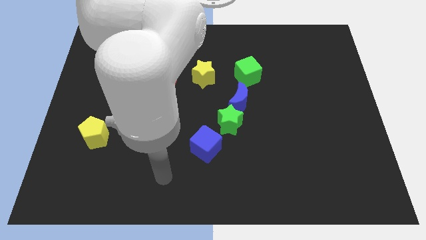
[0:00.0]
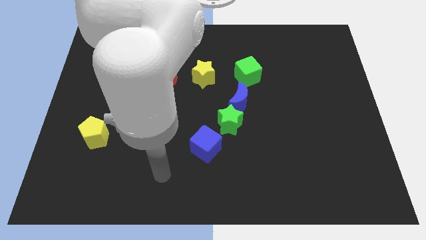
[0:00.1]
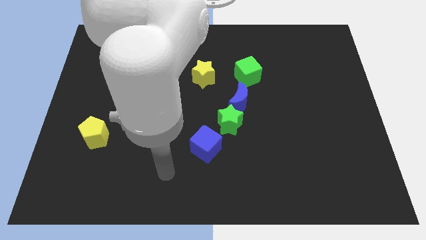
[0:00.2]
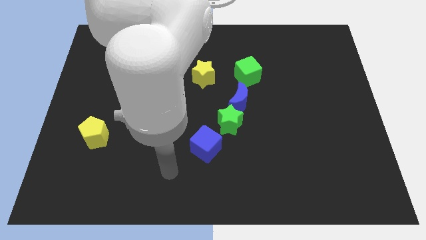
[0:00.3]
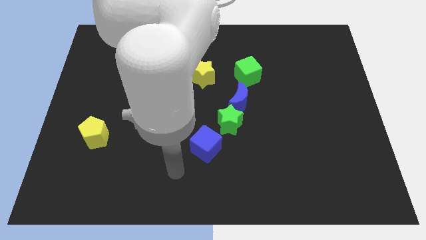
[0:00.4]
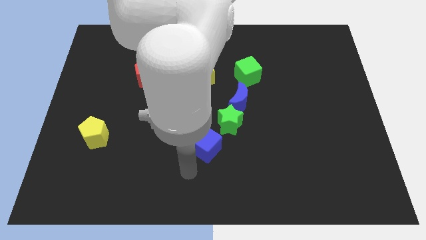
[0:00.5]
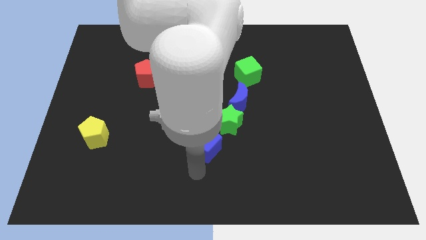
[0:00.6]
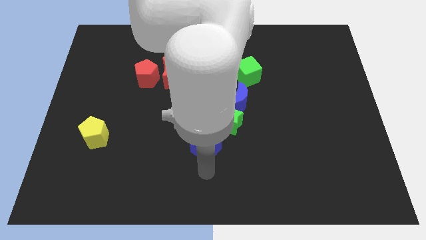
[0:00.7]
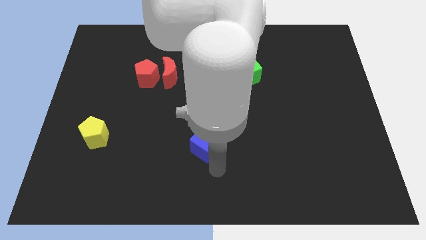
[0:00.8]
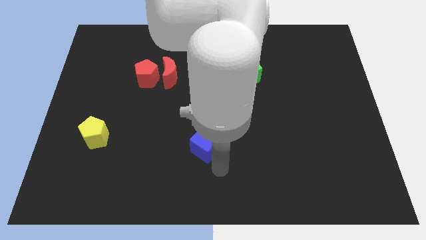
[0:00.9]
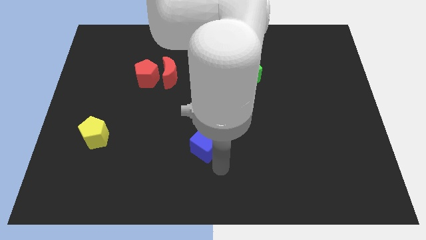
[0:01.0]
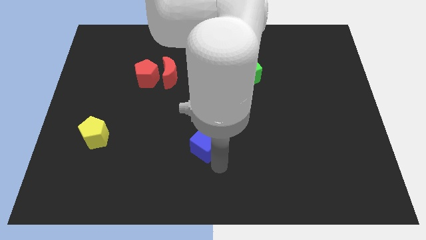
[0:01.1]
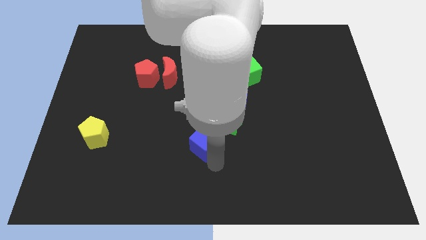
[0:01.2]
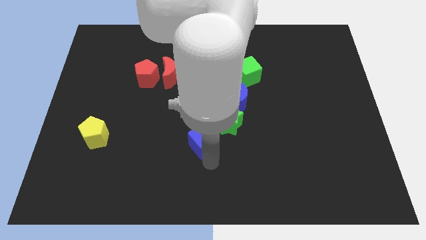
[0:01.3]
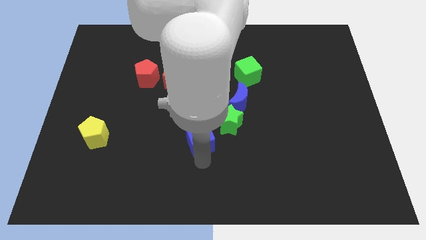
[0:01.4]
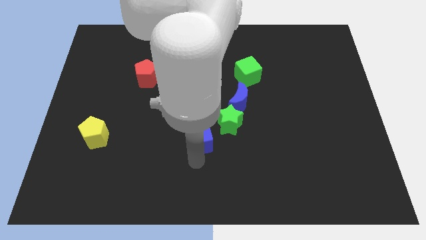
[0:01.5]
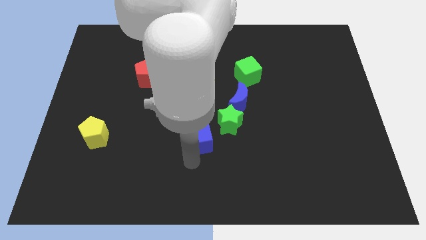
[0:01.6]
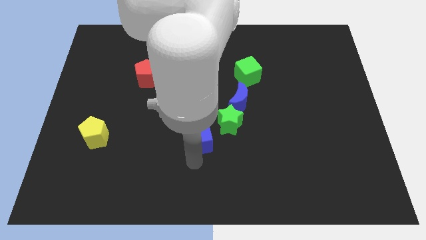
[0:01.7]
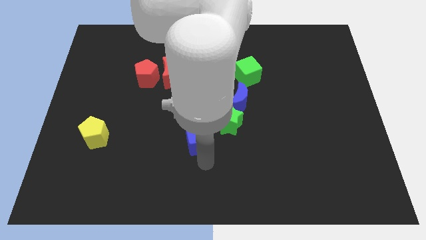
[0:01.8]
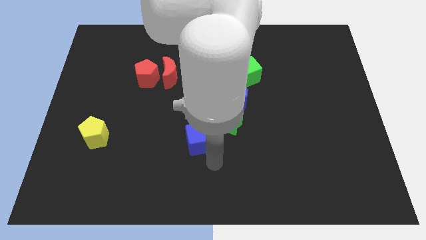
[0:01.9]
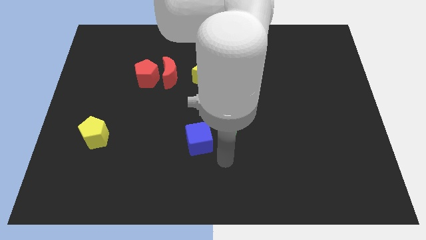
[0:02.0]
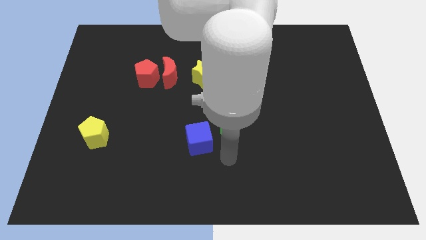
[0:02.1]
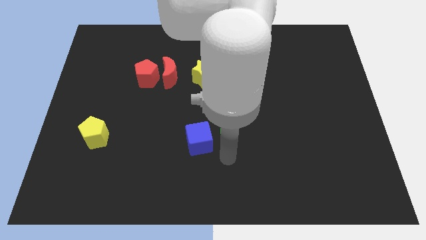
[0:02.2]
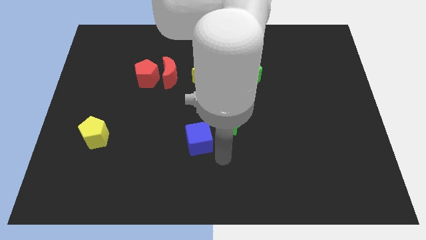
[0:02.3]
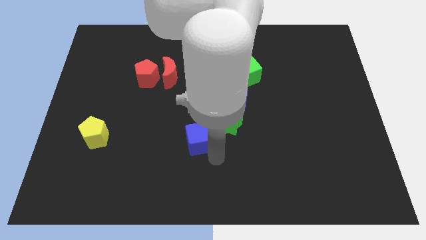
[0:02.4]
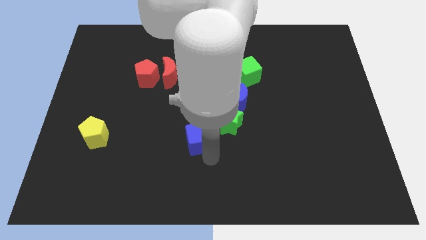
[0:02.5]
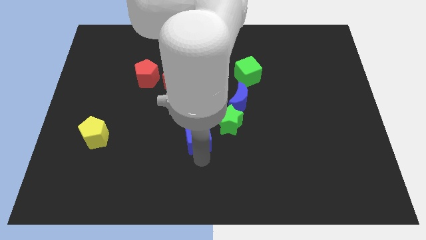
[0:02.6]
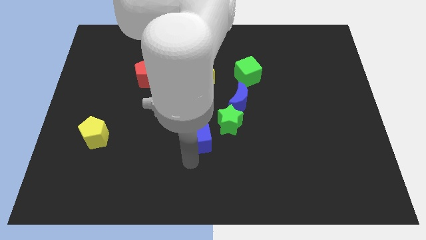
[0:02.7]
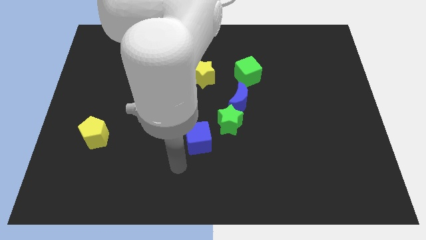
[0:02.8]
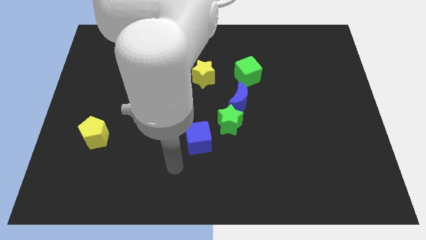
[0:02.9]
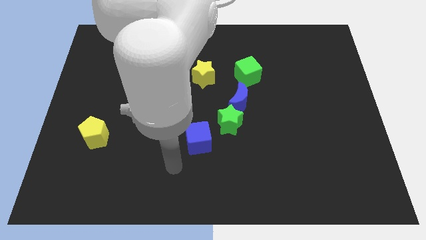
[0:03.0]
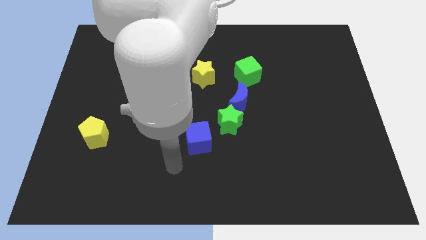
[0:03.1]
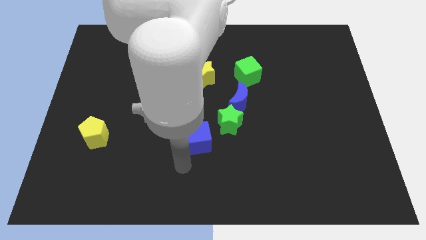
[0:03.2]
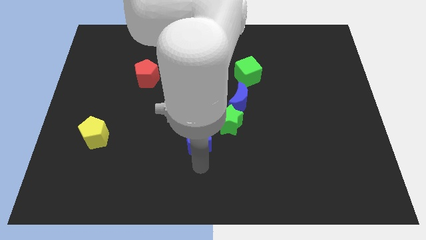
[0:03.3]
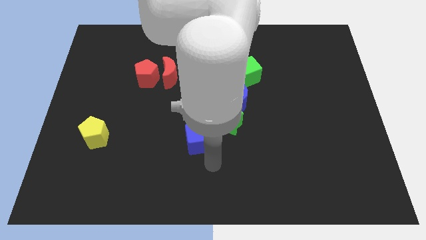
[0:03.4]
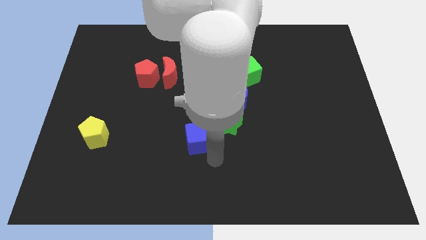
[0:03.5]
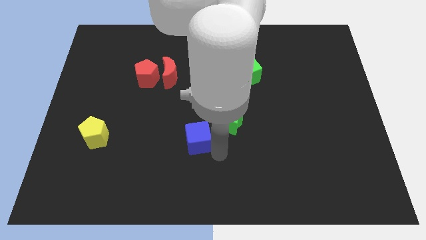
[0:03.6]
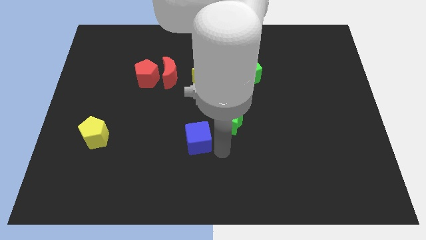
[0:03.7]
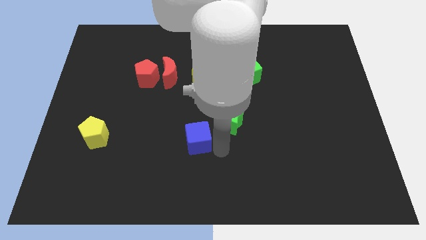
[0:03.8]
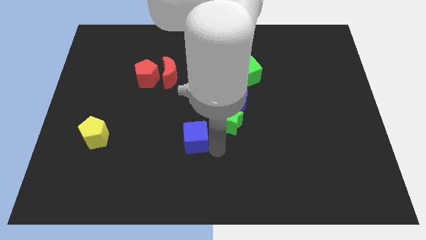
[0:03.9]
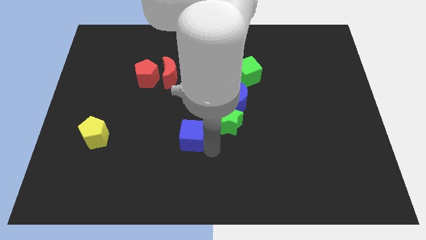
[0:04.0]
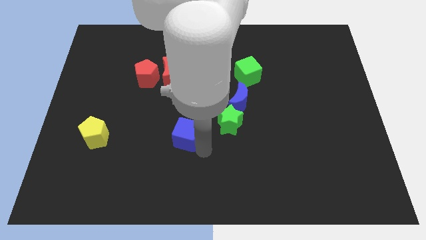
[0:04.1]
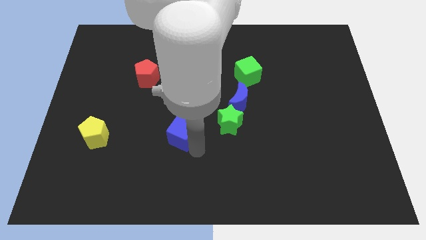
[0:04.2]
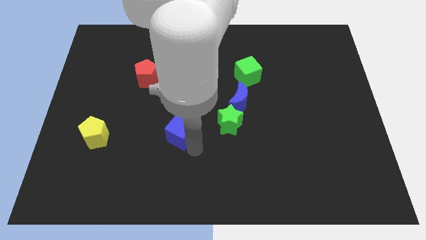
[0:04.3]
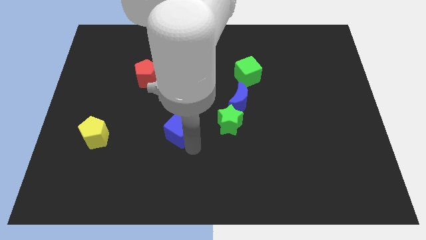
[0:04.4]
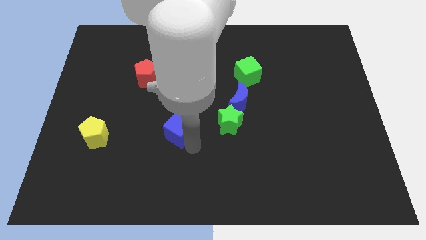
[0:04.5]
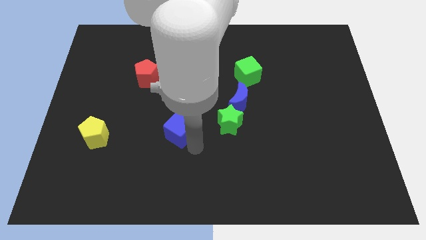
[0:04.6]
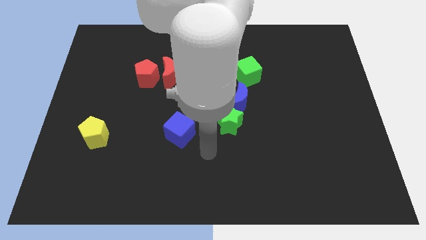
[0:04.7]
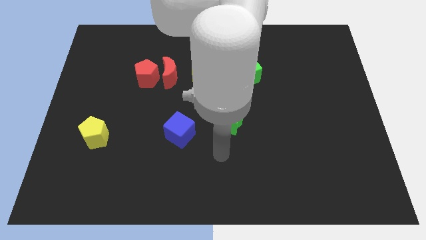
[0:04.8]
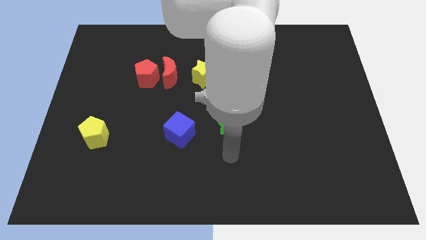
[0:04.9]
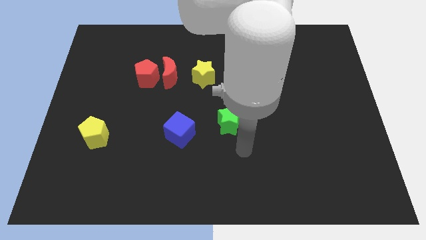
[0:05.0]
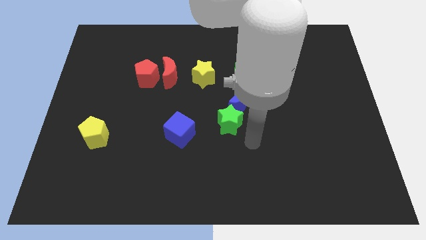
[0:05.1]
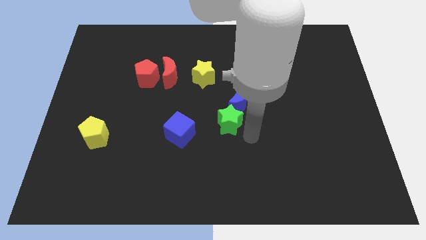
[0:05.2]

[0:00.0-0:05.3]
put the blue cube between the green star and yellow pentagon

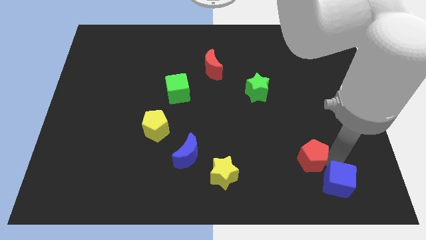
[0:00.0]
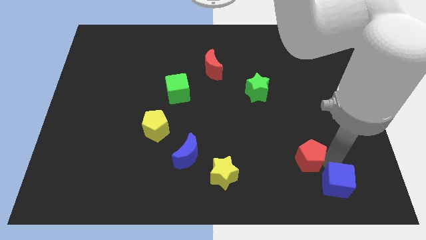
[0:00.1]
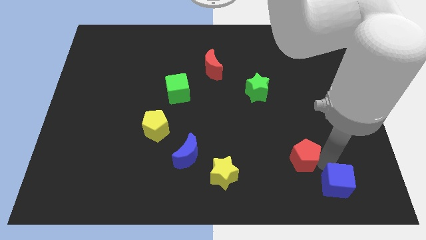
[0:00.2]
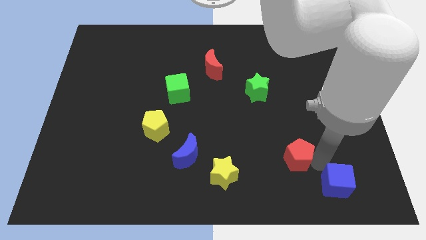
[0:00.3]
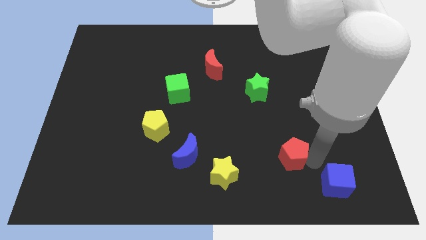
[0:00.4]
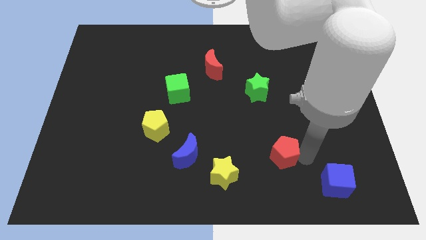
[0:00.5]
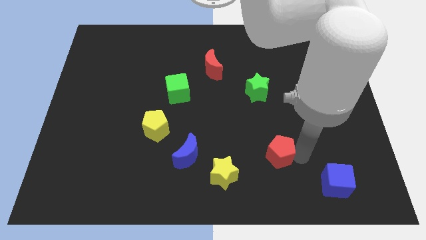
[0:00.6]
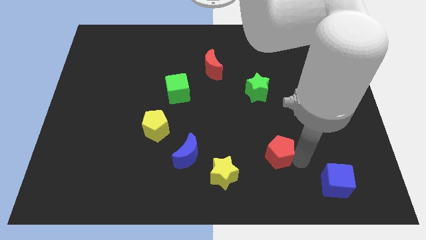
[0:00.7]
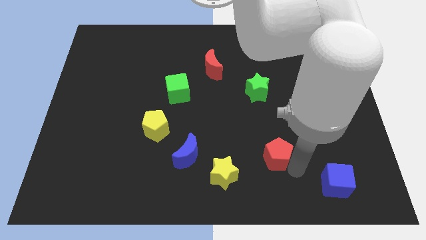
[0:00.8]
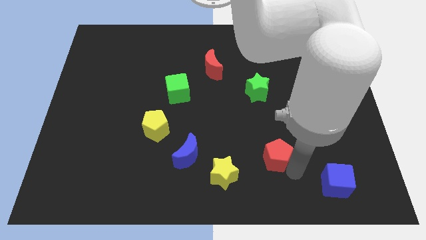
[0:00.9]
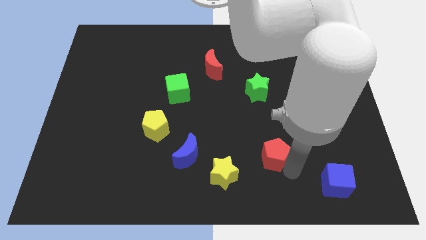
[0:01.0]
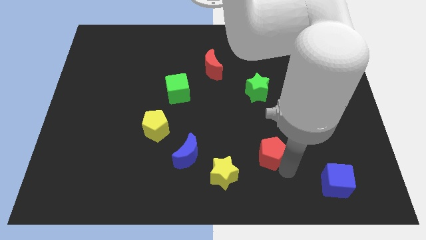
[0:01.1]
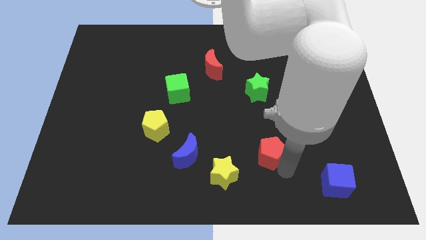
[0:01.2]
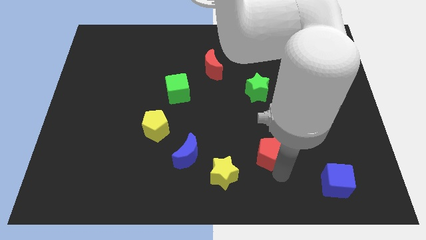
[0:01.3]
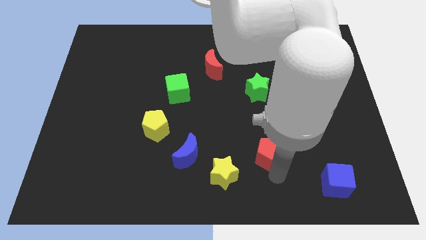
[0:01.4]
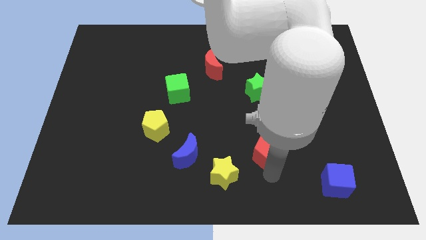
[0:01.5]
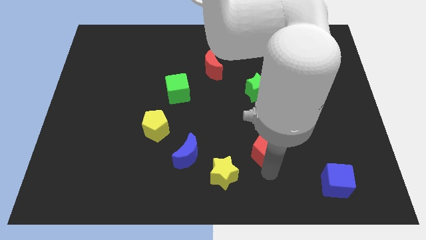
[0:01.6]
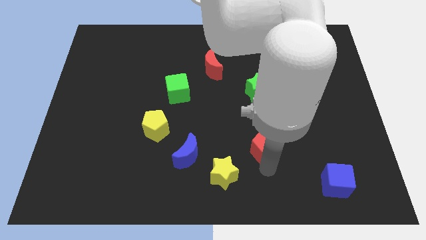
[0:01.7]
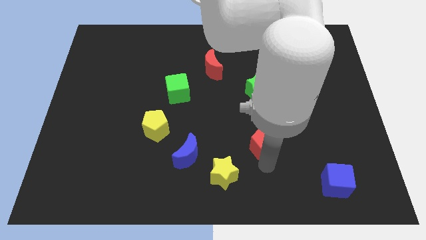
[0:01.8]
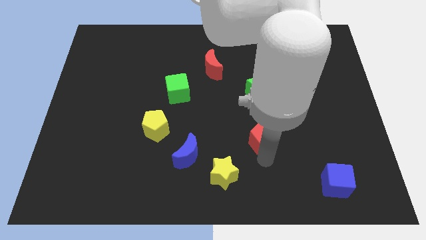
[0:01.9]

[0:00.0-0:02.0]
place the red pentagon vertically below the green star

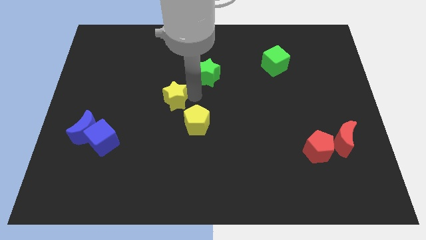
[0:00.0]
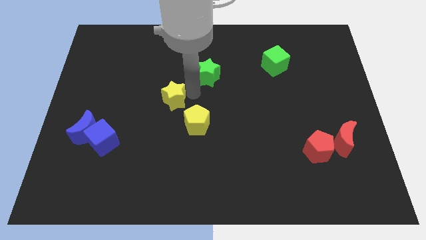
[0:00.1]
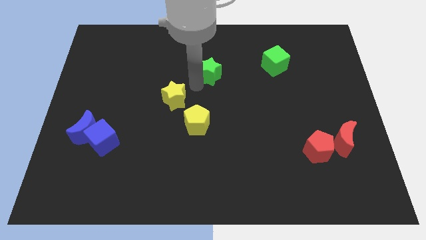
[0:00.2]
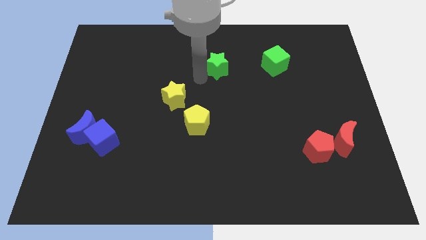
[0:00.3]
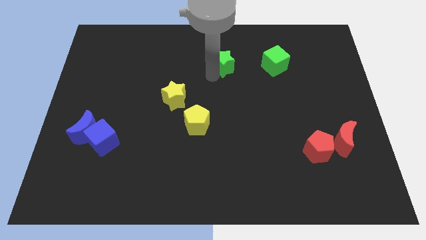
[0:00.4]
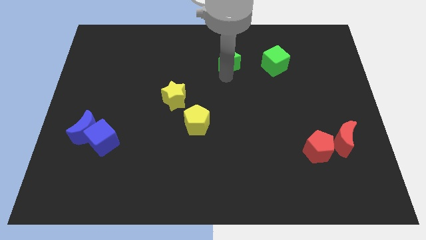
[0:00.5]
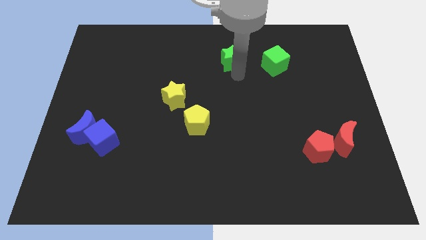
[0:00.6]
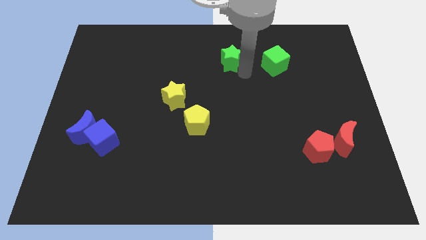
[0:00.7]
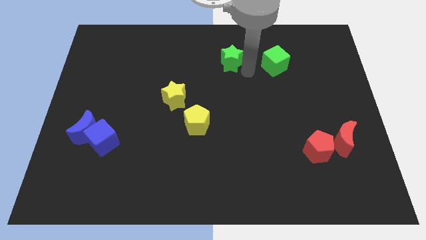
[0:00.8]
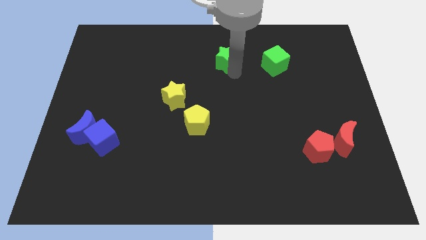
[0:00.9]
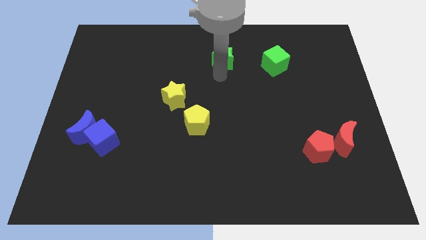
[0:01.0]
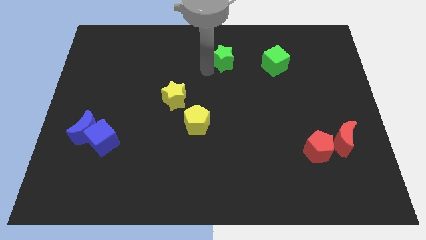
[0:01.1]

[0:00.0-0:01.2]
place the green star to the left to the green cube

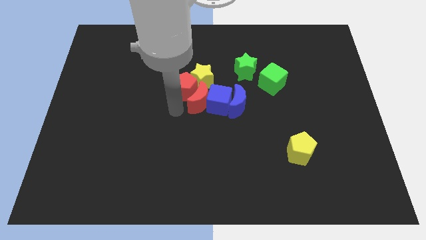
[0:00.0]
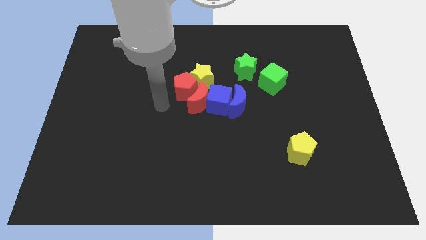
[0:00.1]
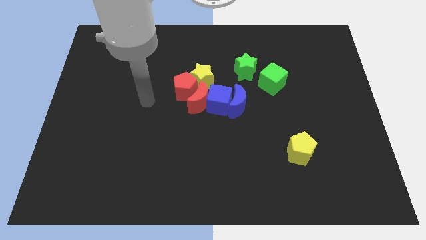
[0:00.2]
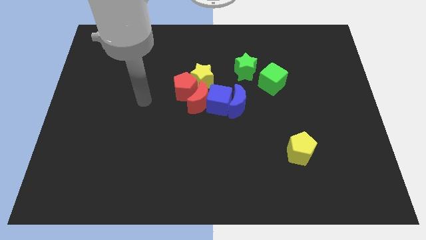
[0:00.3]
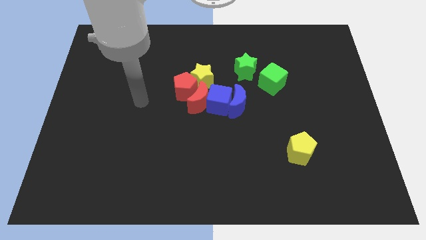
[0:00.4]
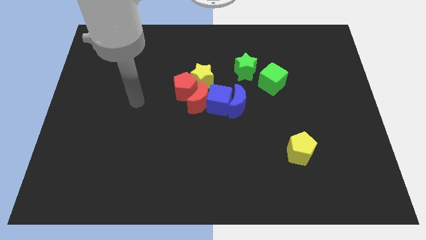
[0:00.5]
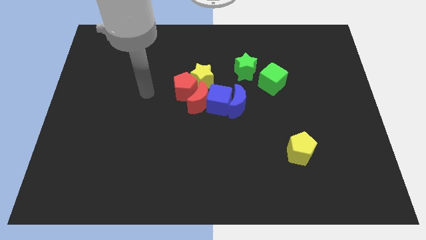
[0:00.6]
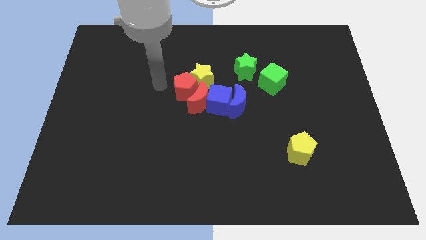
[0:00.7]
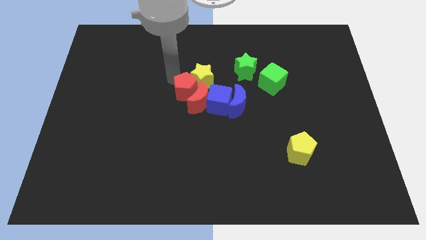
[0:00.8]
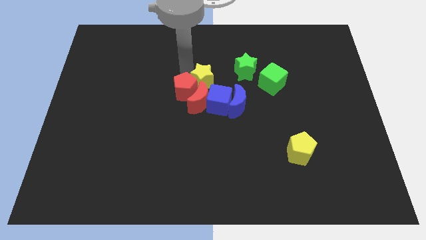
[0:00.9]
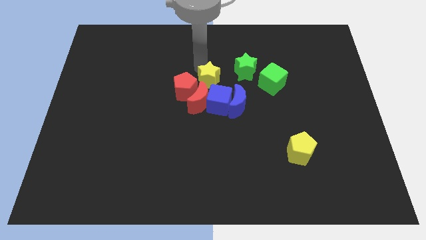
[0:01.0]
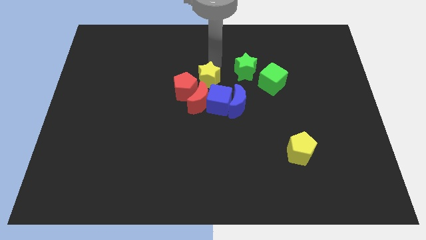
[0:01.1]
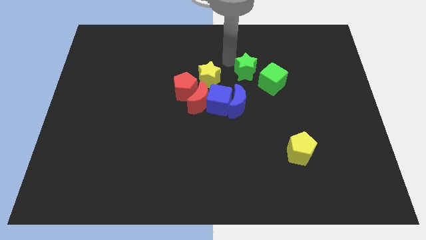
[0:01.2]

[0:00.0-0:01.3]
point your arm at the top of the yellow star
